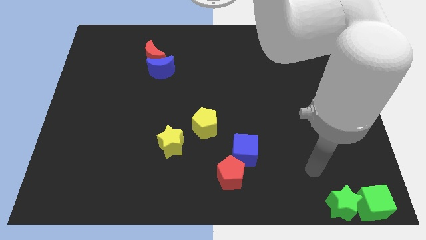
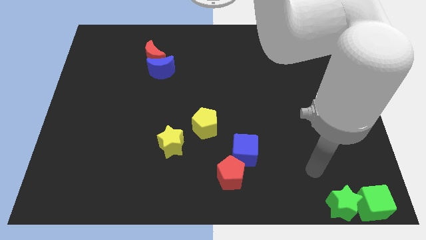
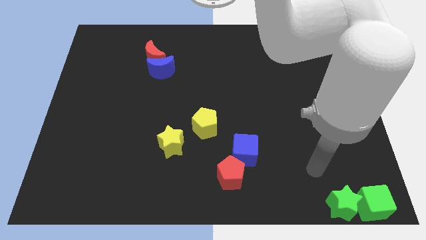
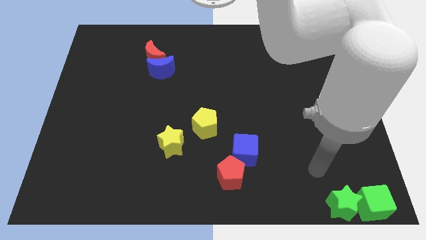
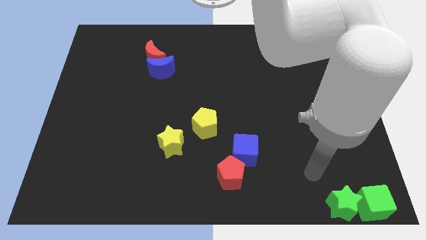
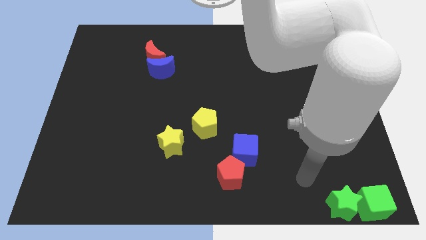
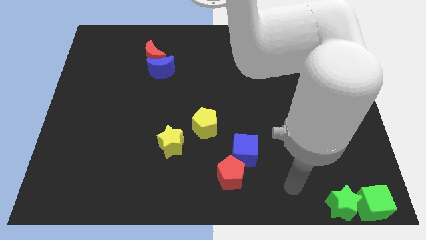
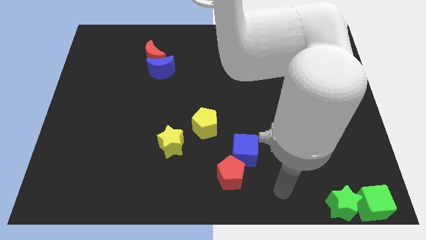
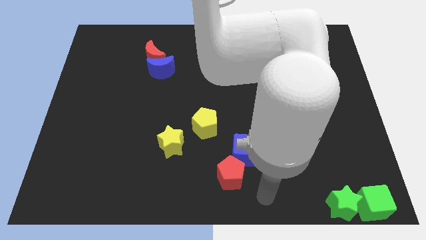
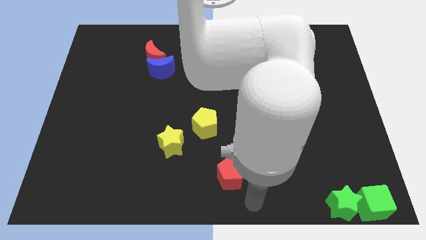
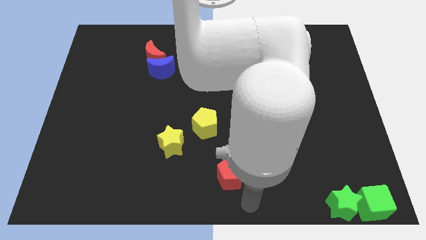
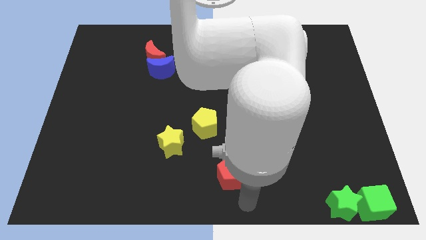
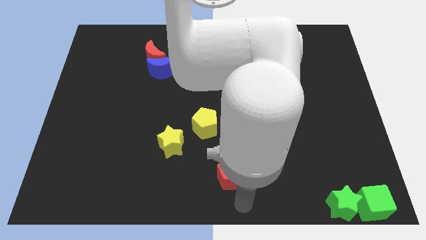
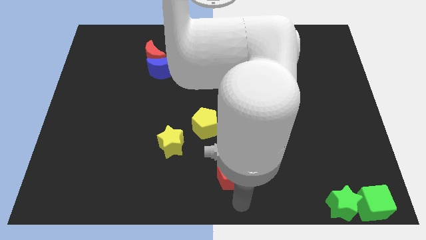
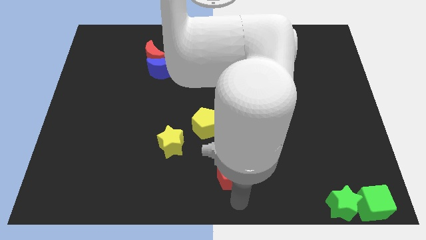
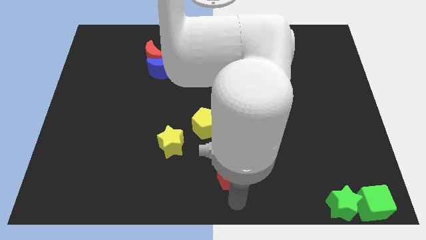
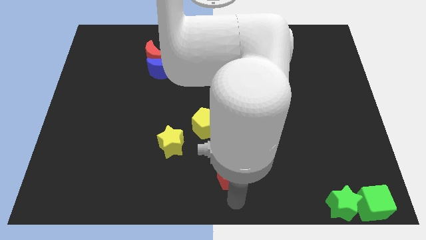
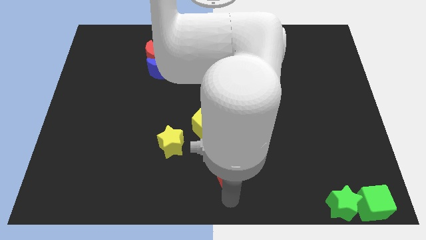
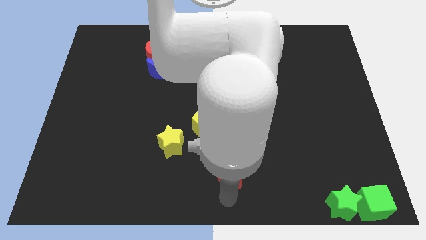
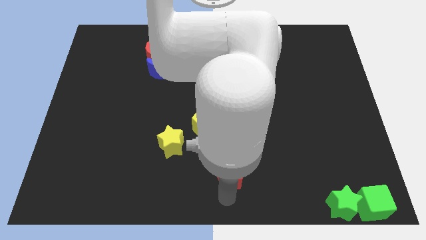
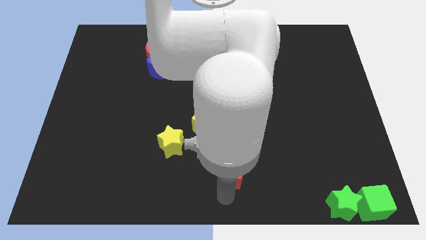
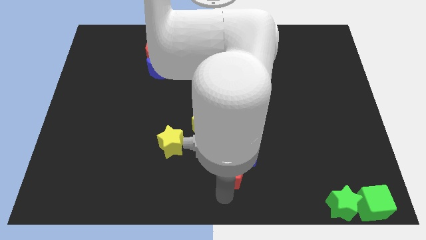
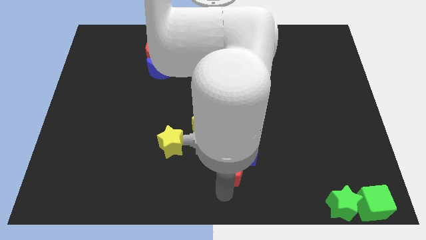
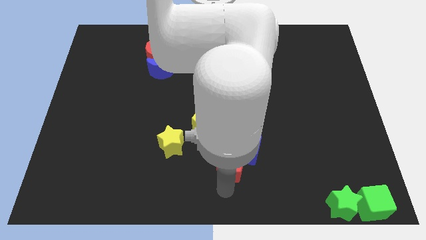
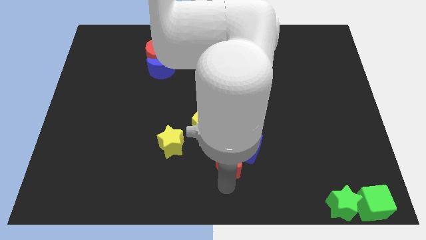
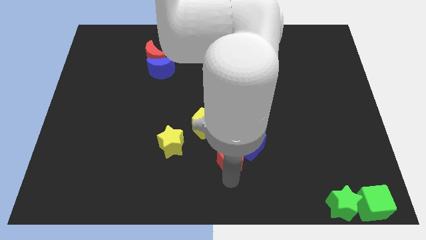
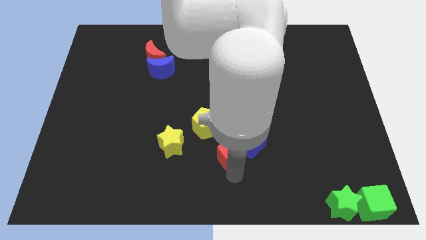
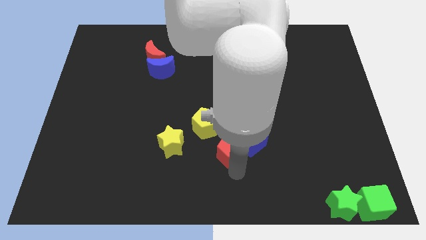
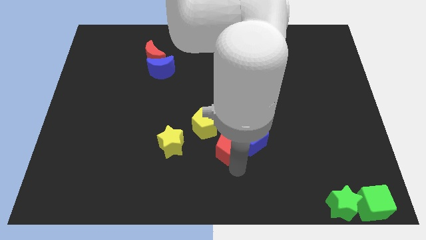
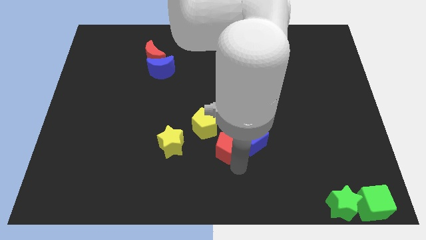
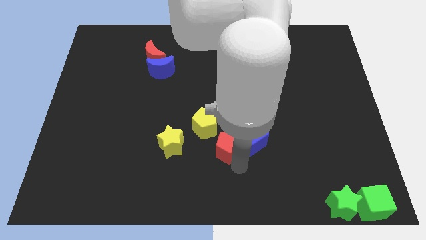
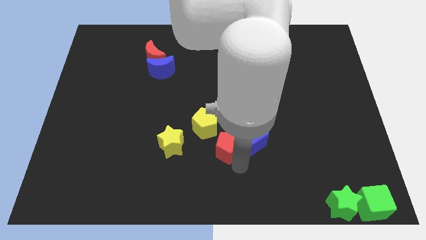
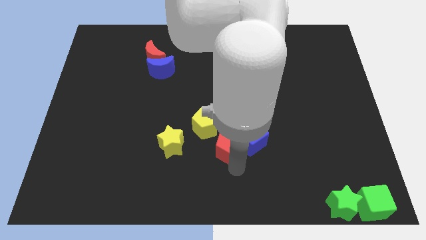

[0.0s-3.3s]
move the red pentagon into the blue cube

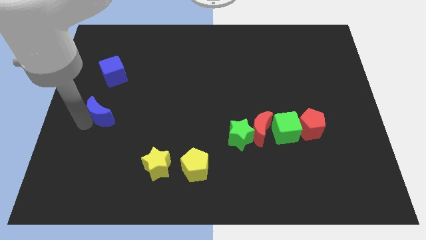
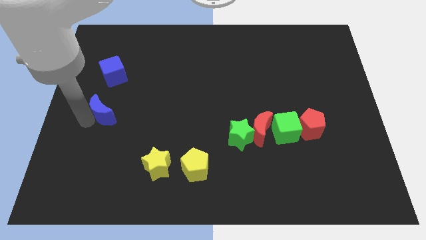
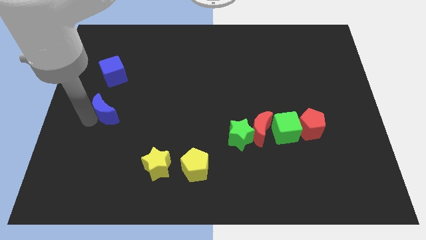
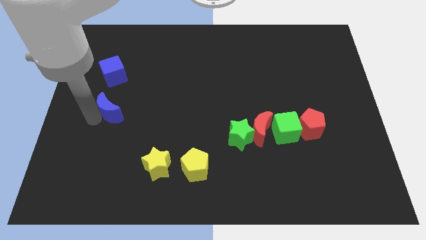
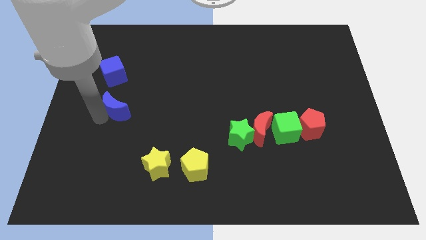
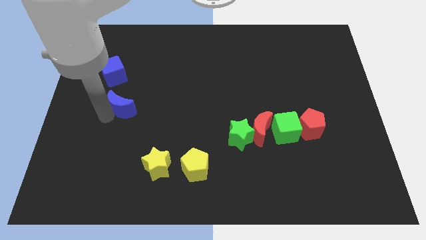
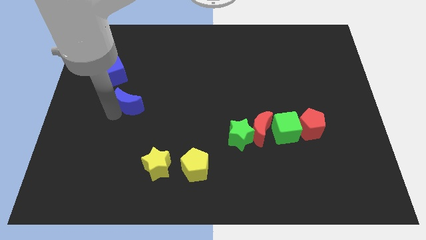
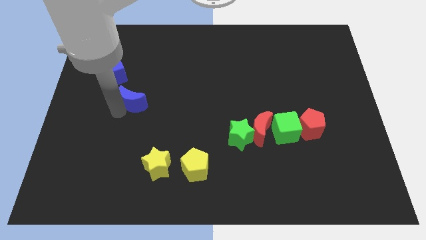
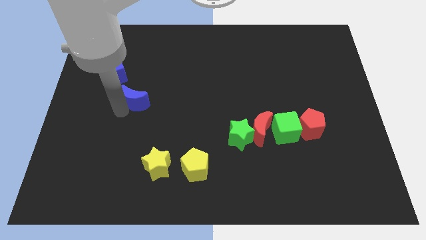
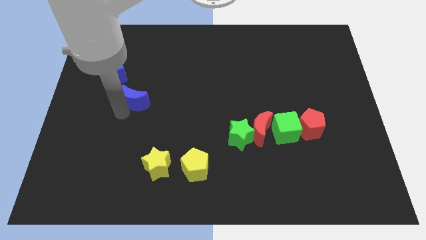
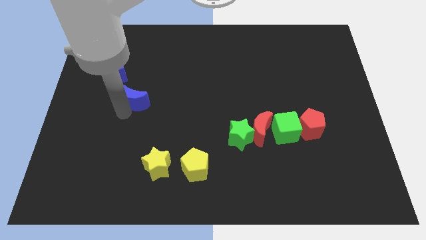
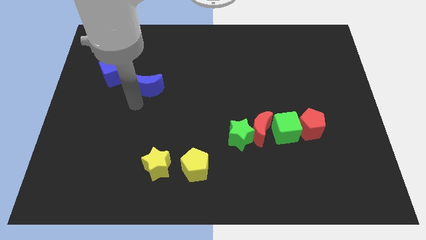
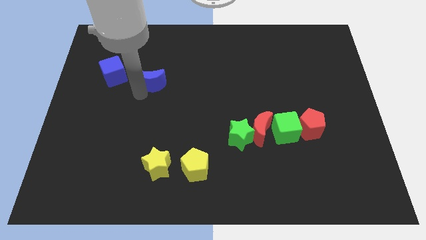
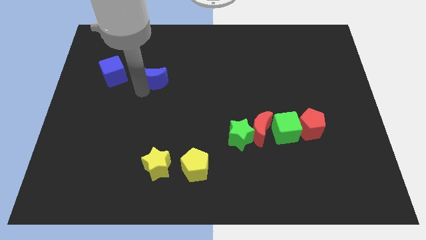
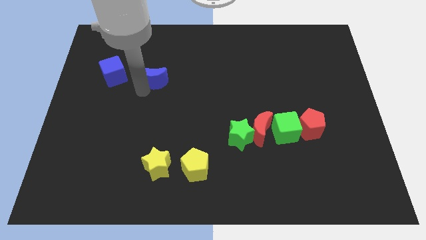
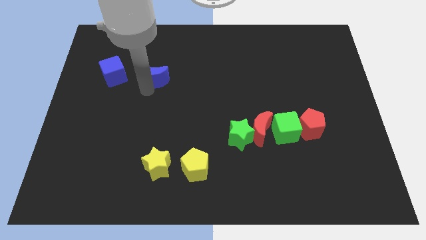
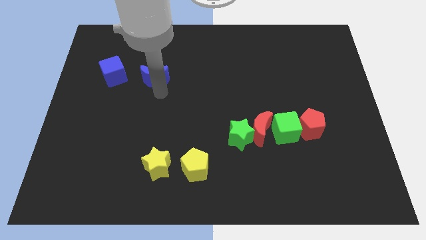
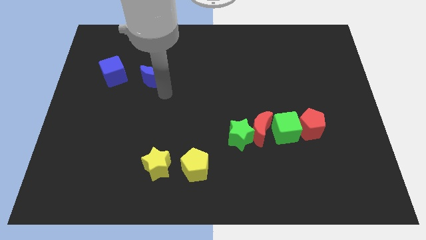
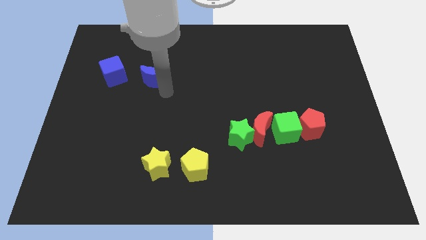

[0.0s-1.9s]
place your arm below the blue moon

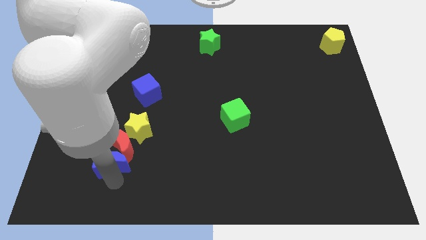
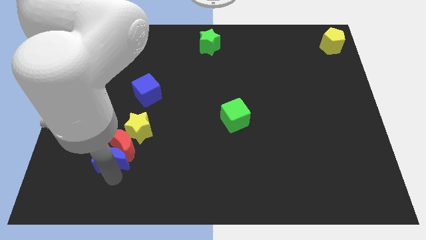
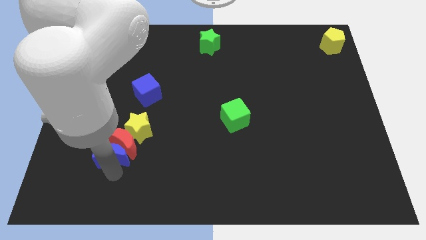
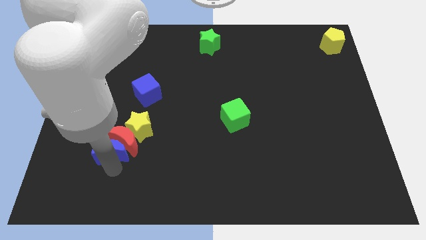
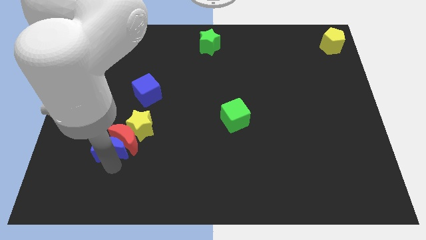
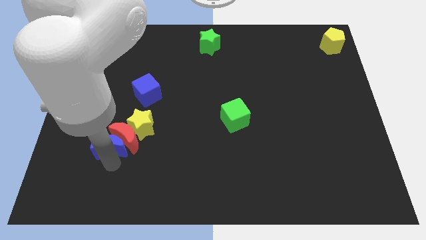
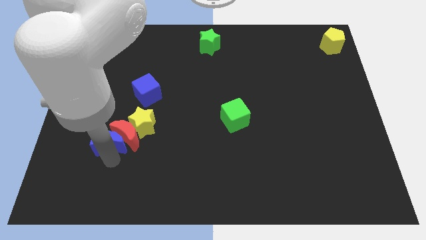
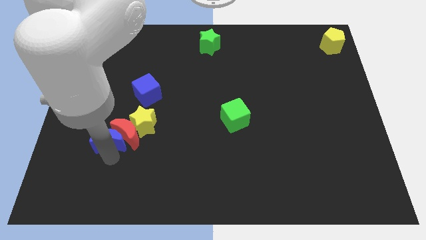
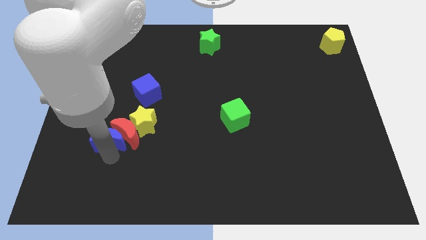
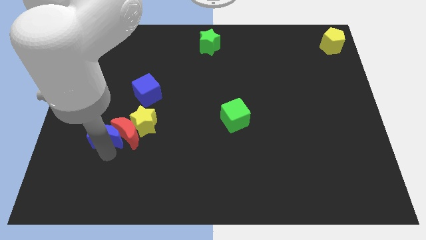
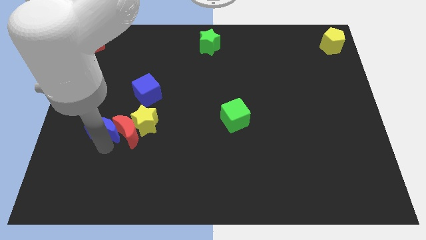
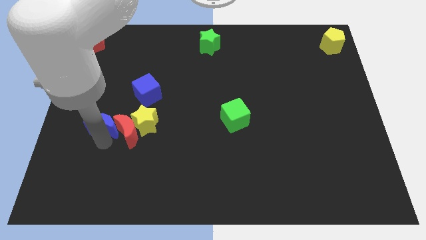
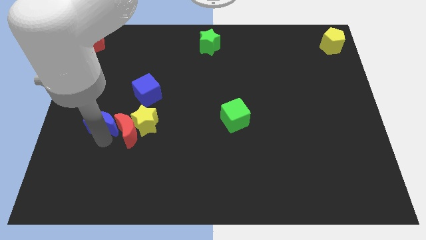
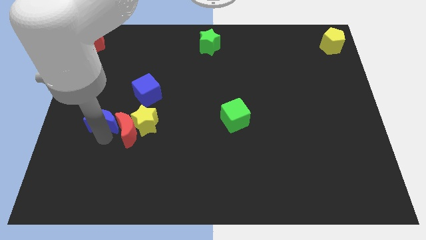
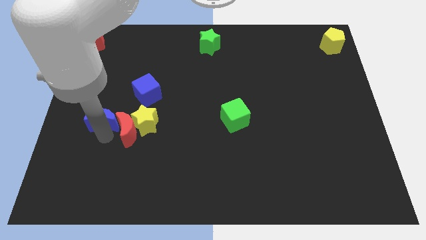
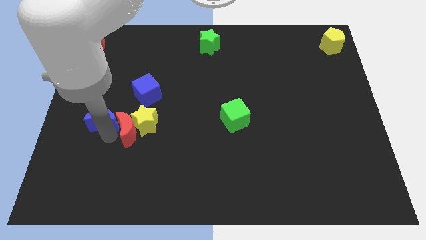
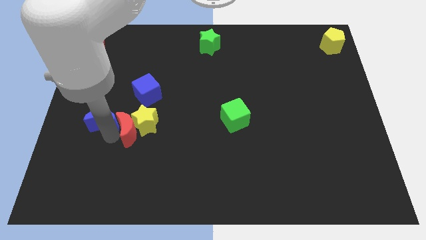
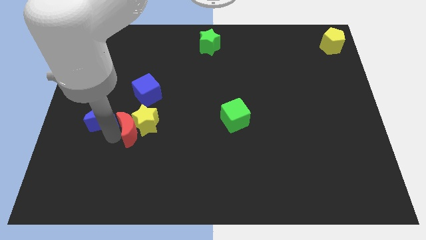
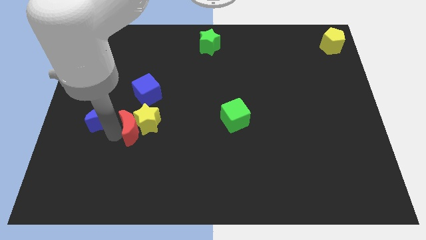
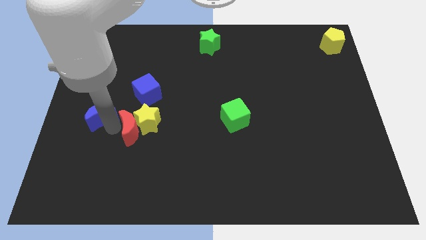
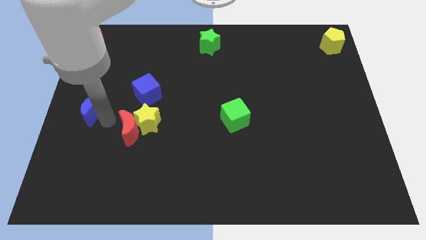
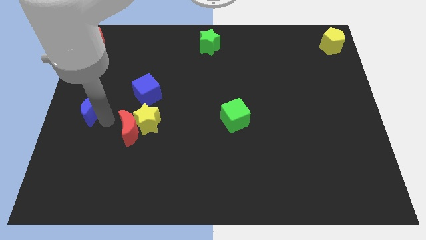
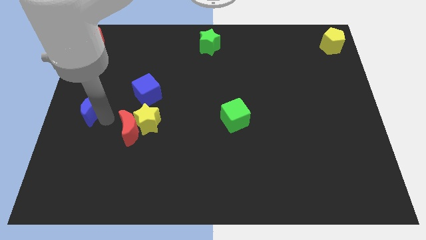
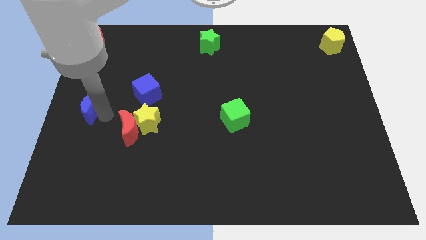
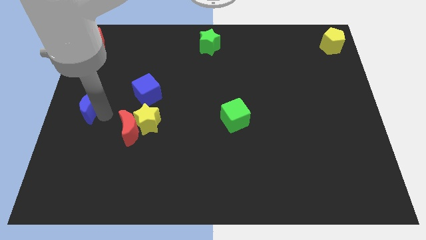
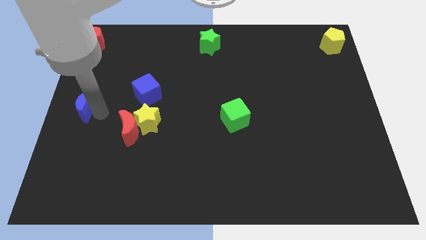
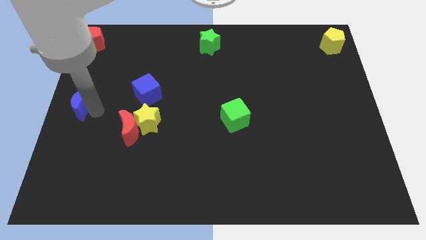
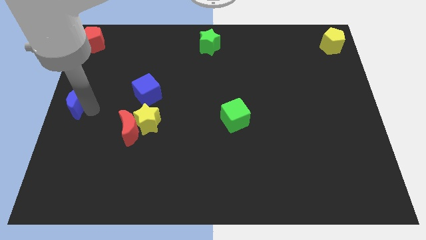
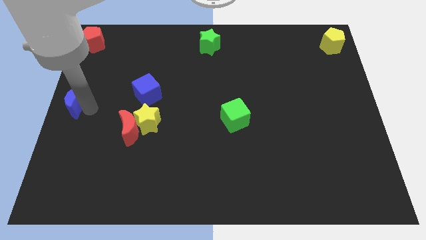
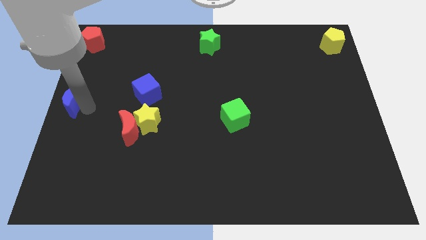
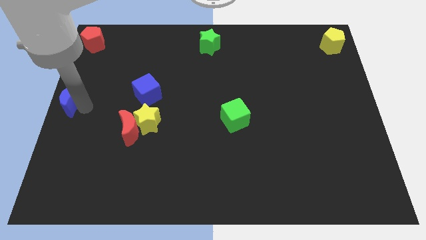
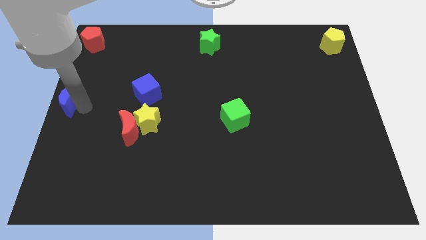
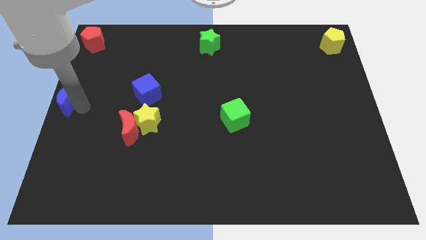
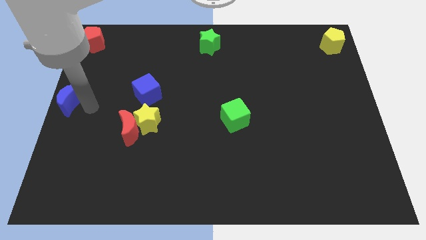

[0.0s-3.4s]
put the blue crescent at the center left of the table

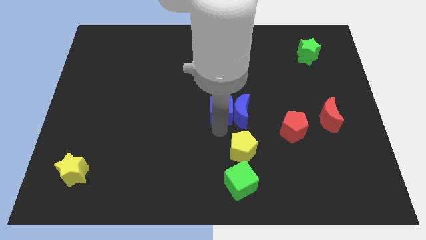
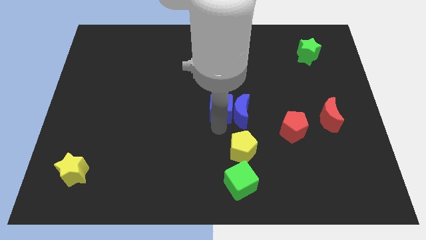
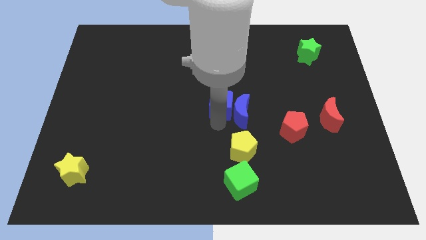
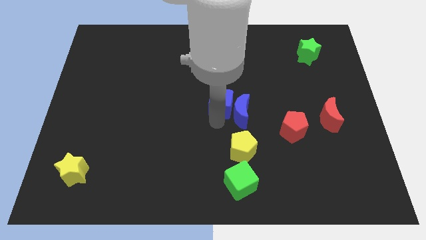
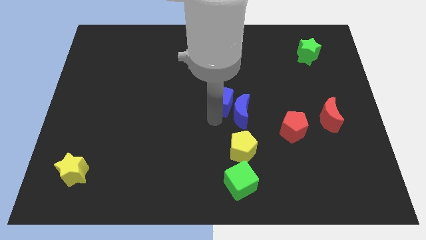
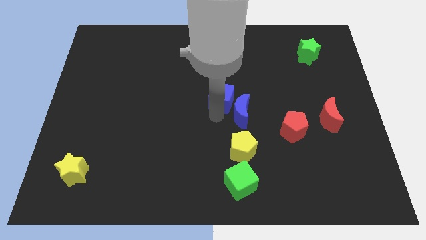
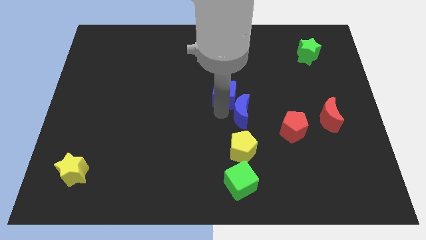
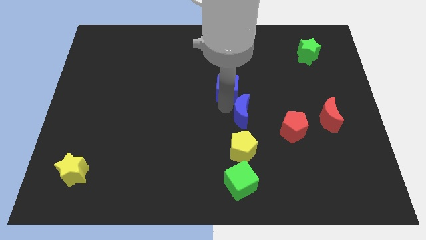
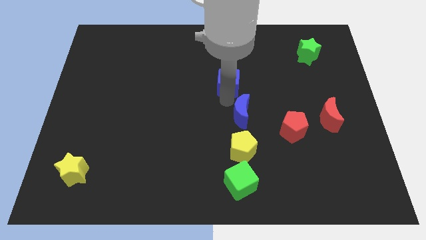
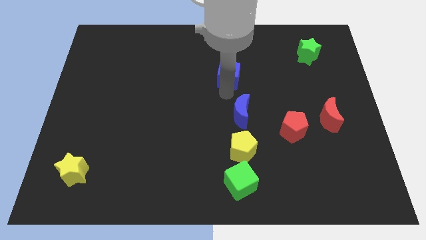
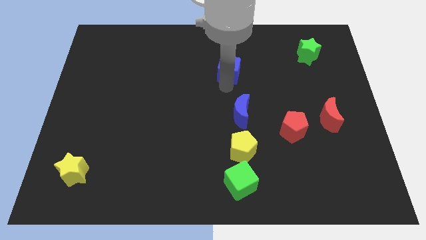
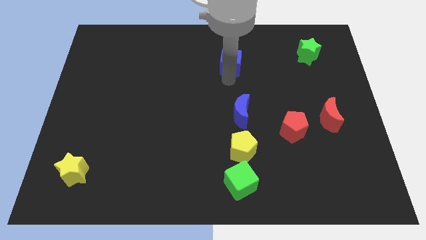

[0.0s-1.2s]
push blue cube slightly up
